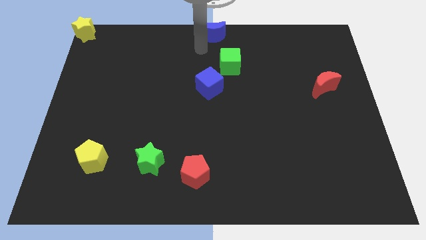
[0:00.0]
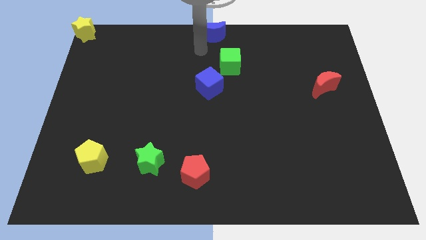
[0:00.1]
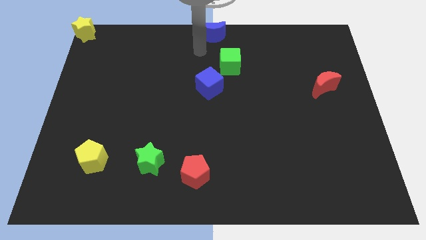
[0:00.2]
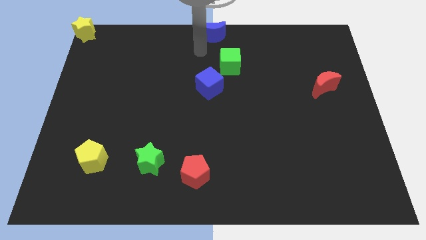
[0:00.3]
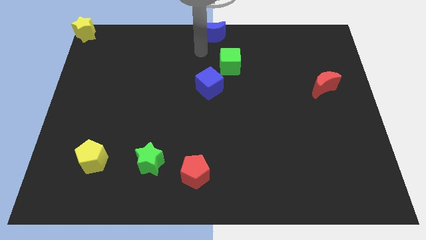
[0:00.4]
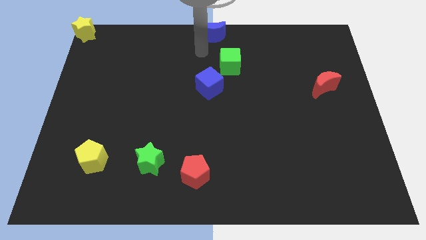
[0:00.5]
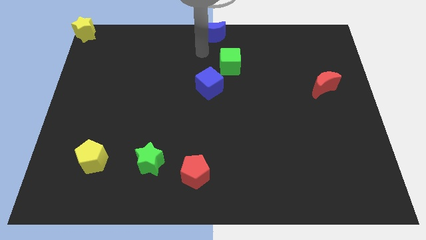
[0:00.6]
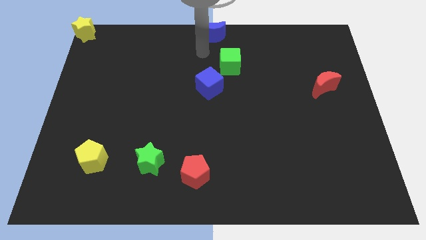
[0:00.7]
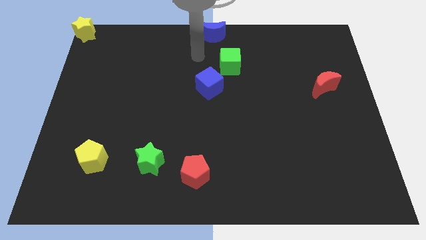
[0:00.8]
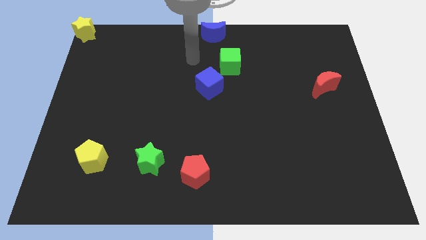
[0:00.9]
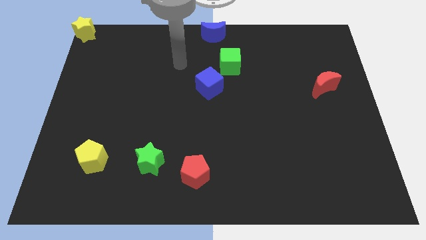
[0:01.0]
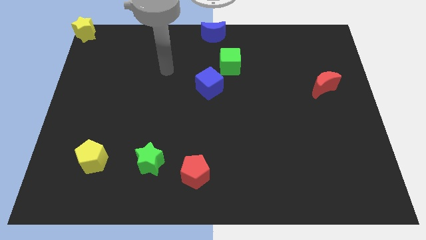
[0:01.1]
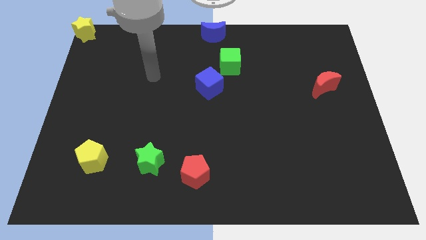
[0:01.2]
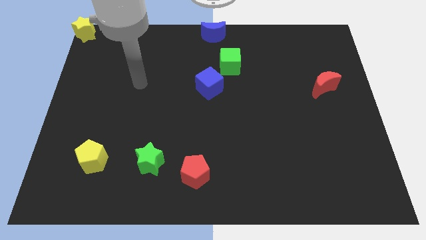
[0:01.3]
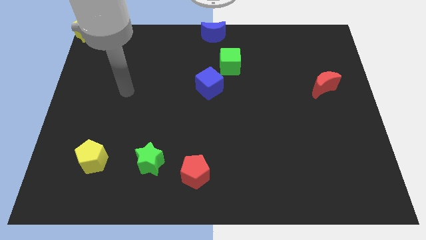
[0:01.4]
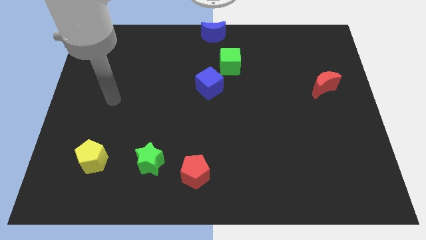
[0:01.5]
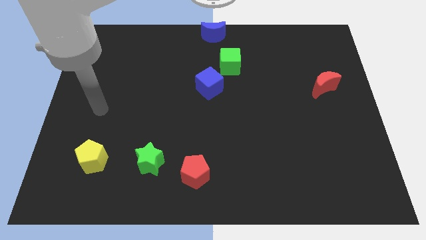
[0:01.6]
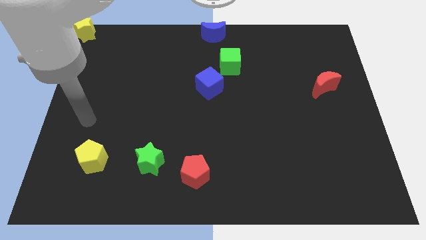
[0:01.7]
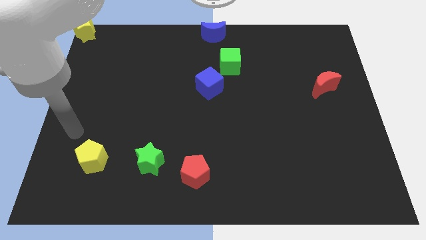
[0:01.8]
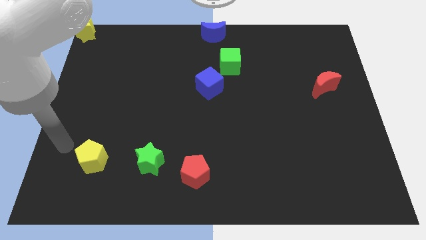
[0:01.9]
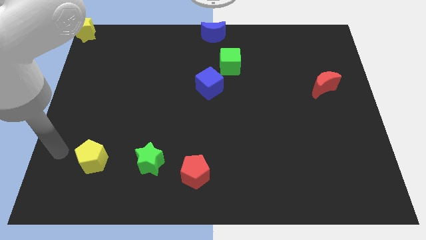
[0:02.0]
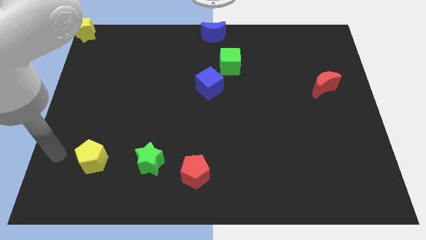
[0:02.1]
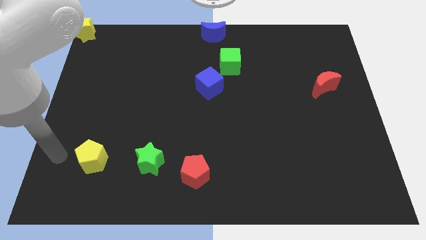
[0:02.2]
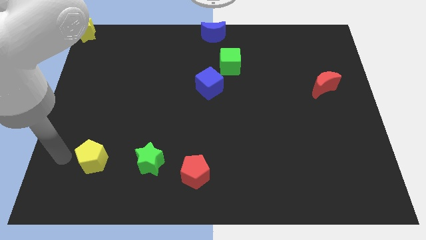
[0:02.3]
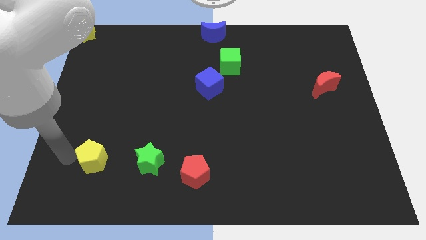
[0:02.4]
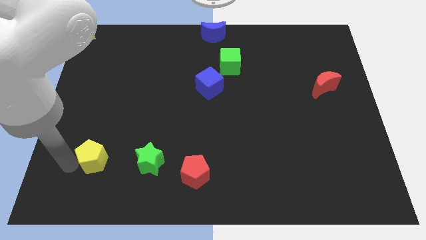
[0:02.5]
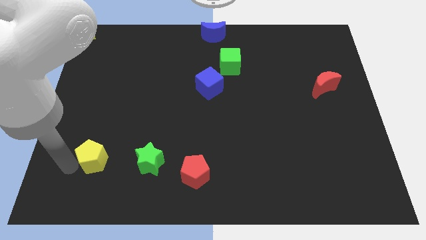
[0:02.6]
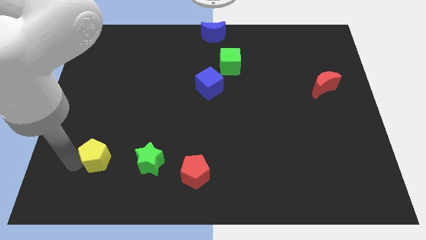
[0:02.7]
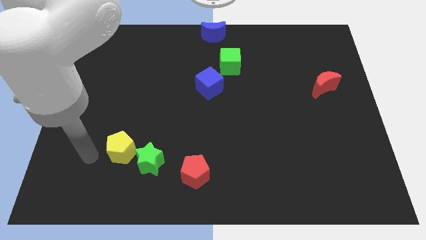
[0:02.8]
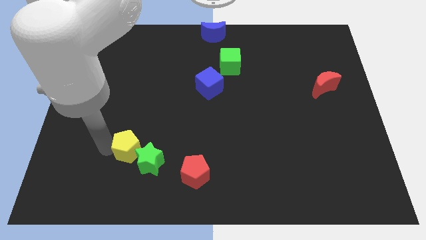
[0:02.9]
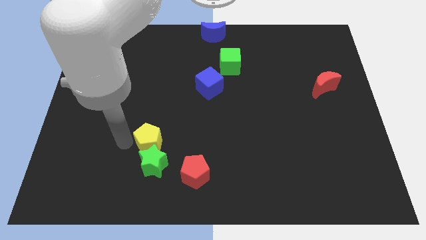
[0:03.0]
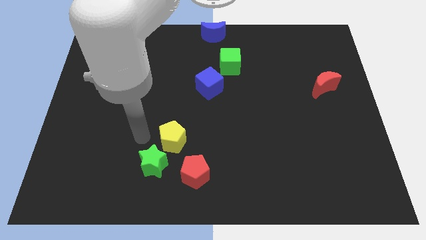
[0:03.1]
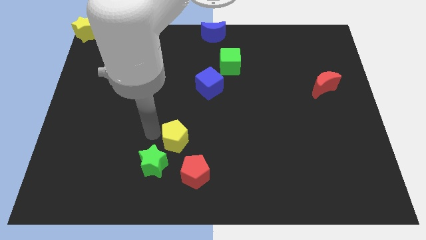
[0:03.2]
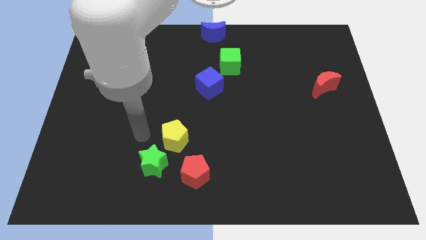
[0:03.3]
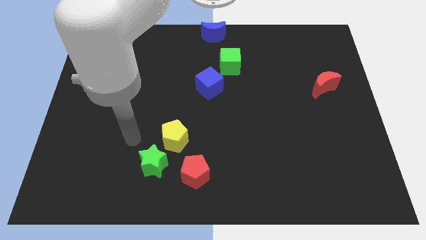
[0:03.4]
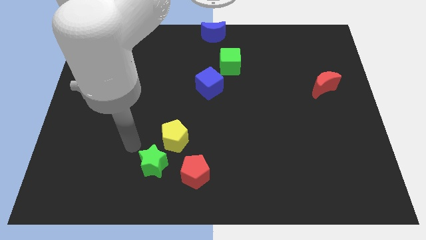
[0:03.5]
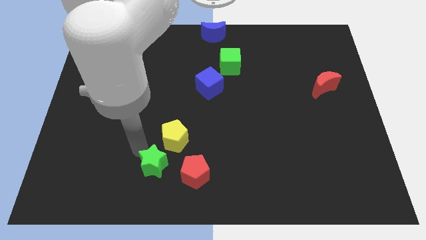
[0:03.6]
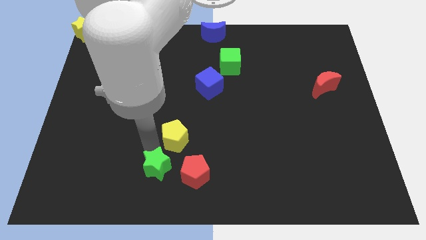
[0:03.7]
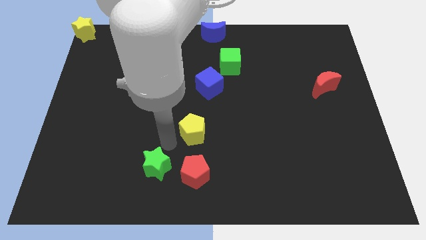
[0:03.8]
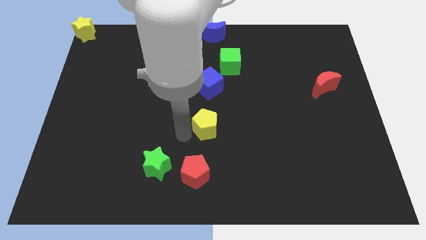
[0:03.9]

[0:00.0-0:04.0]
push yellow pentagon in between red pentagon and blue cube

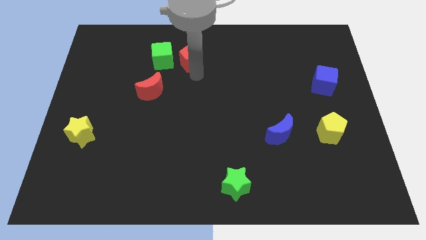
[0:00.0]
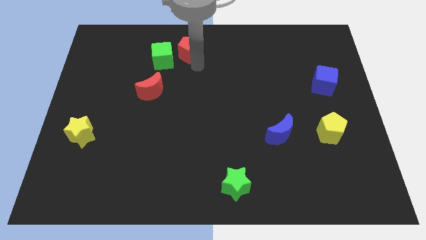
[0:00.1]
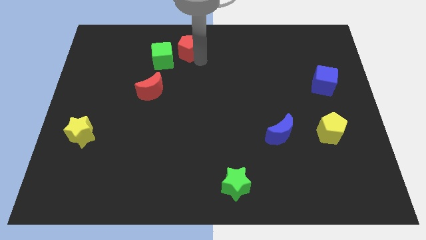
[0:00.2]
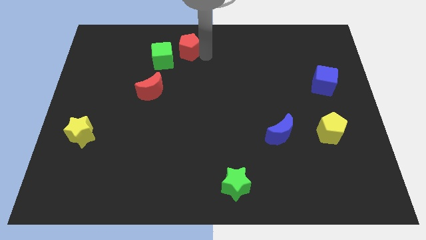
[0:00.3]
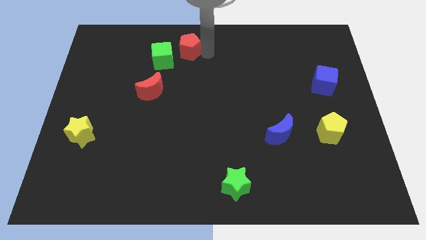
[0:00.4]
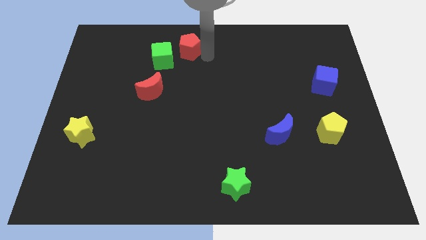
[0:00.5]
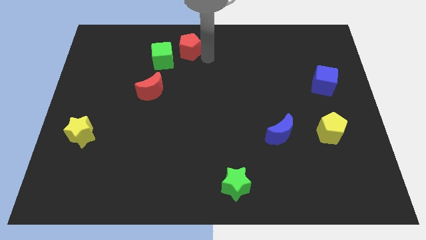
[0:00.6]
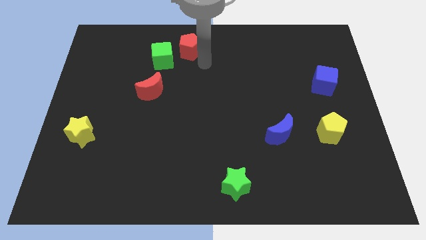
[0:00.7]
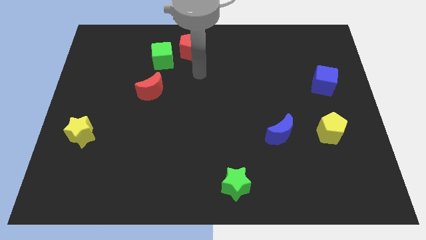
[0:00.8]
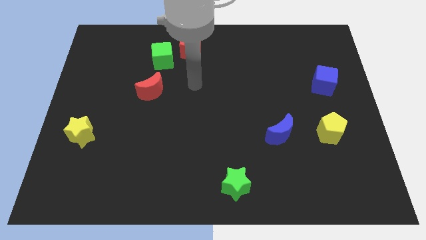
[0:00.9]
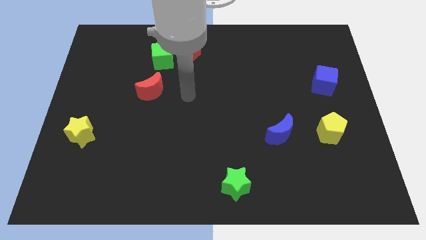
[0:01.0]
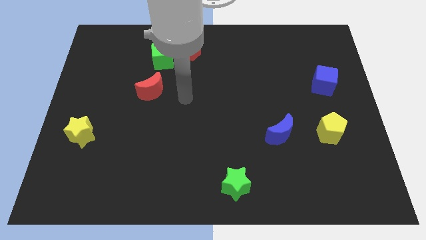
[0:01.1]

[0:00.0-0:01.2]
move the arm away from the red pentagon

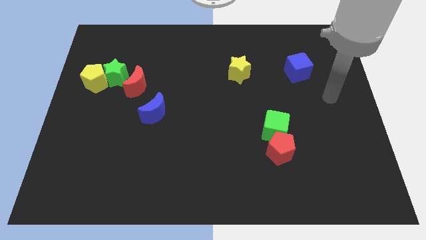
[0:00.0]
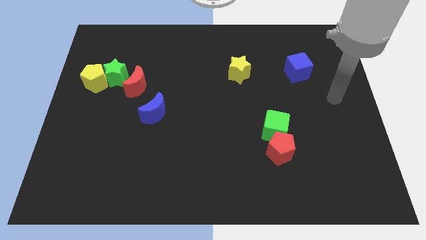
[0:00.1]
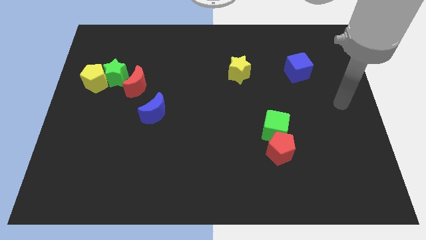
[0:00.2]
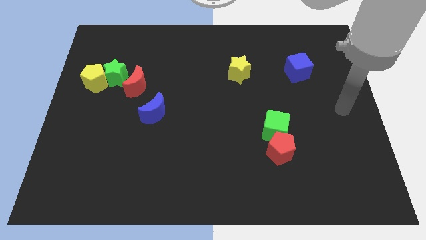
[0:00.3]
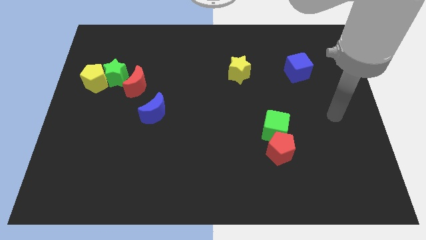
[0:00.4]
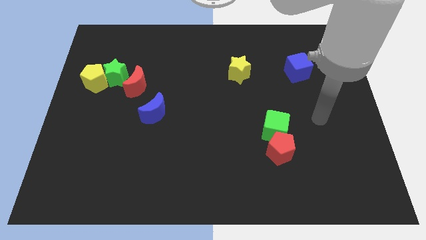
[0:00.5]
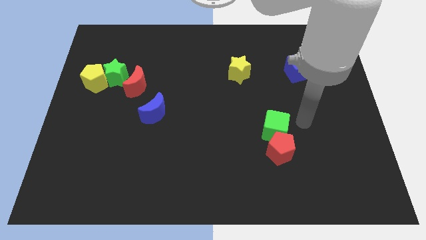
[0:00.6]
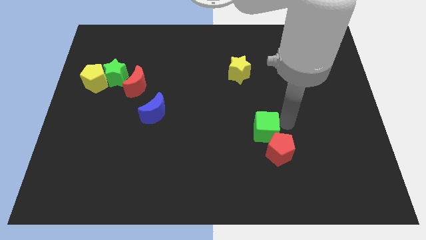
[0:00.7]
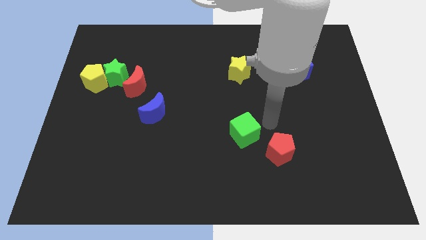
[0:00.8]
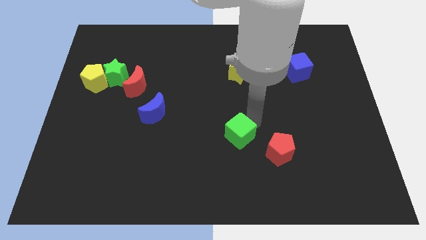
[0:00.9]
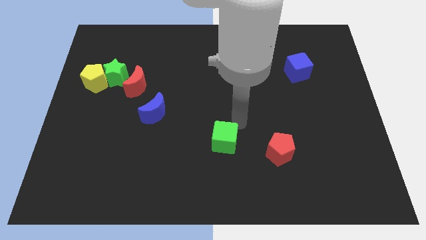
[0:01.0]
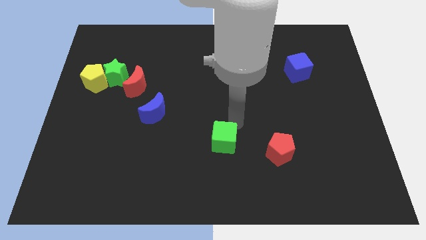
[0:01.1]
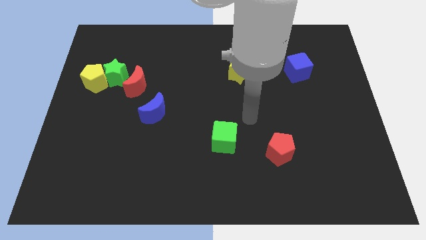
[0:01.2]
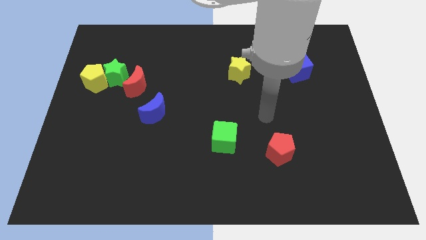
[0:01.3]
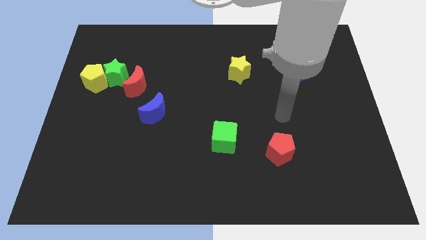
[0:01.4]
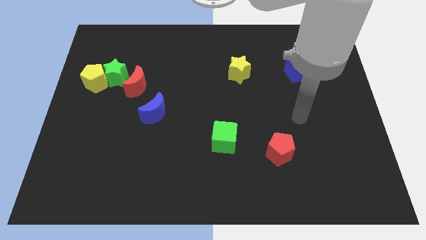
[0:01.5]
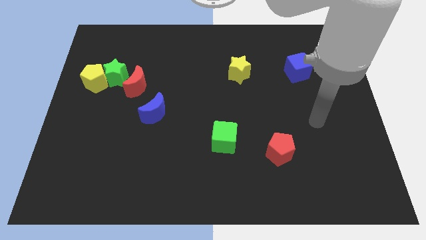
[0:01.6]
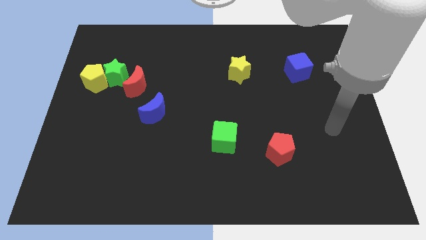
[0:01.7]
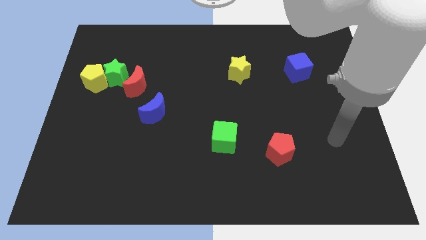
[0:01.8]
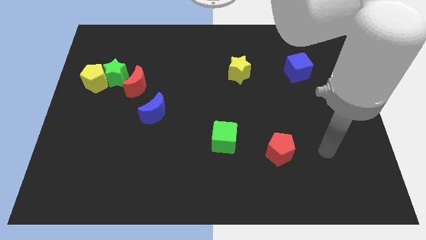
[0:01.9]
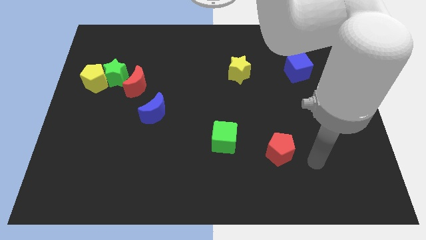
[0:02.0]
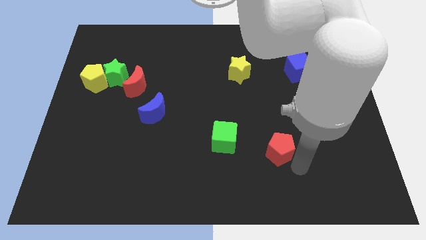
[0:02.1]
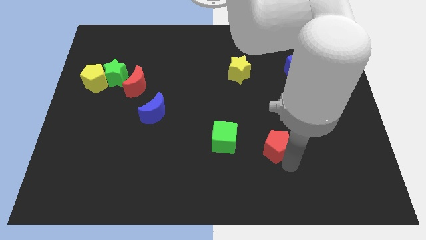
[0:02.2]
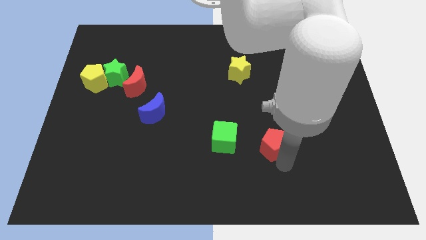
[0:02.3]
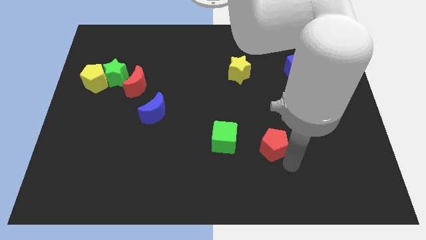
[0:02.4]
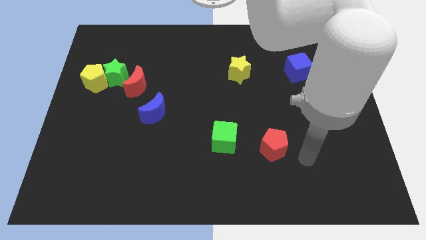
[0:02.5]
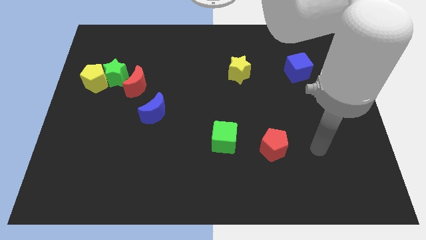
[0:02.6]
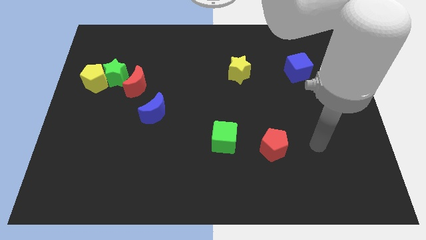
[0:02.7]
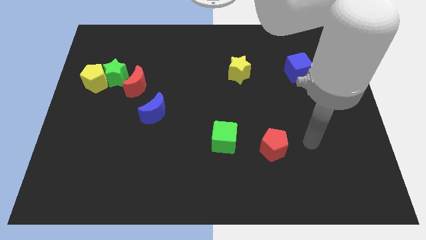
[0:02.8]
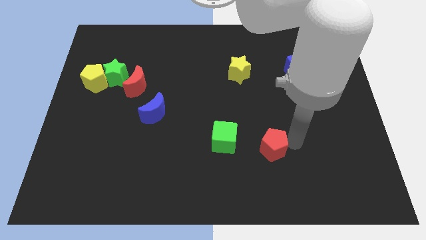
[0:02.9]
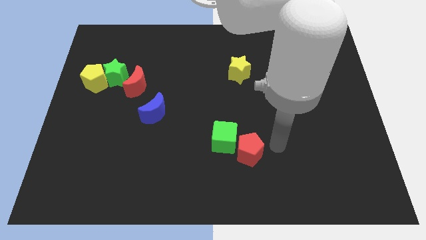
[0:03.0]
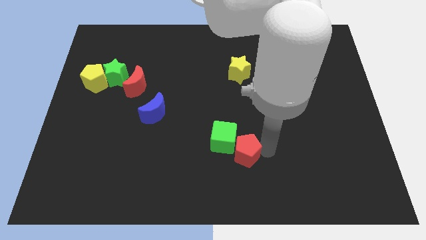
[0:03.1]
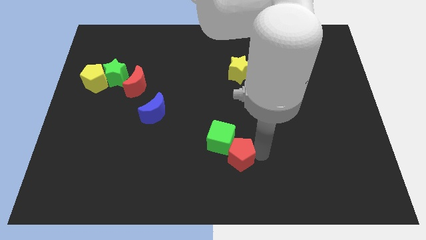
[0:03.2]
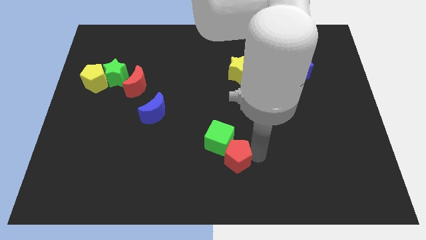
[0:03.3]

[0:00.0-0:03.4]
push the green cube and red pentagon towards the center of the board

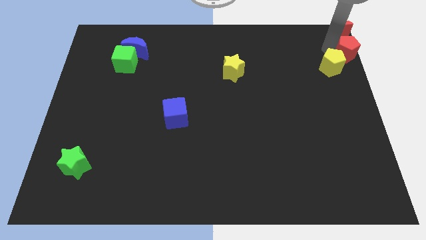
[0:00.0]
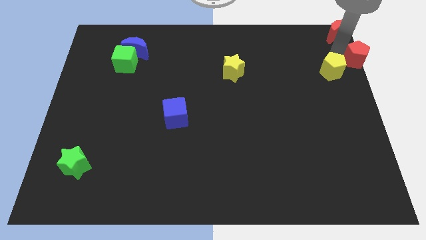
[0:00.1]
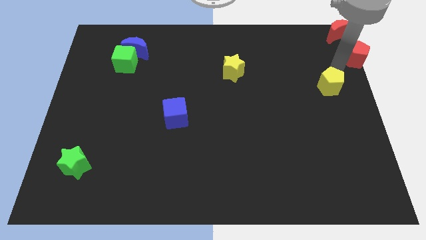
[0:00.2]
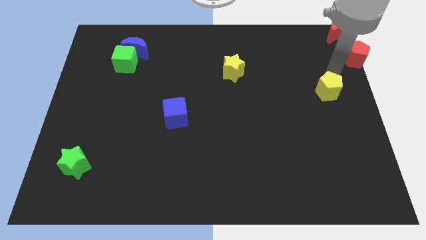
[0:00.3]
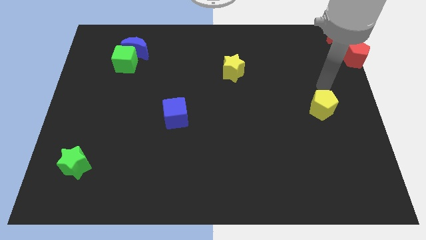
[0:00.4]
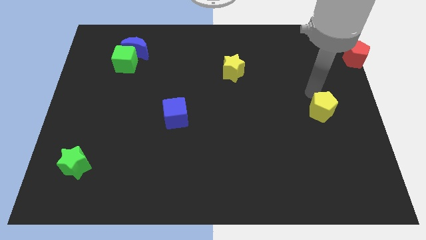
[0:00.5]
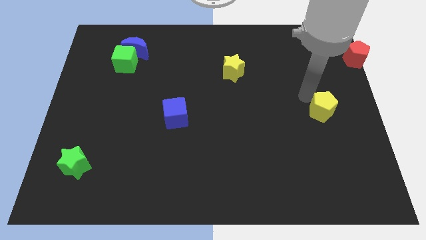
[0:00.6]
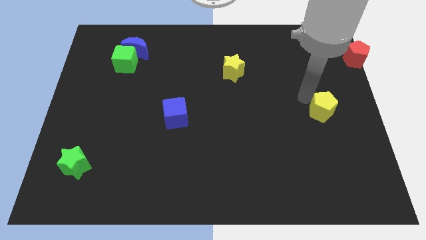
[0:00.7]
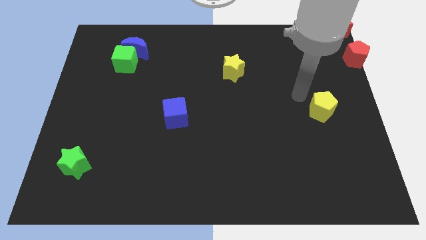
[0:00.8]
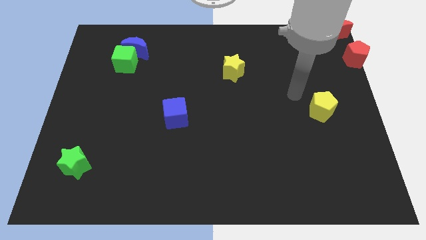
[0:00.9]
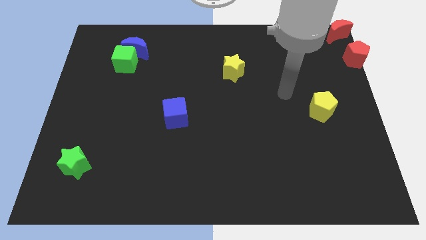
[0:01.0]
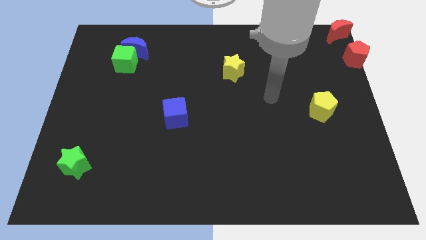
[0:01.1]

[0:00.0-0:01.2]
push the yellow pentagon away from the red pentagon
